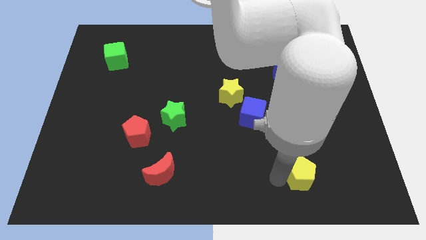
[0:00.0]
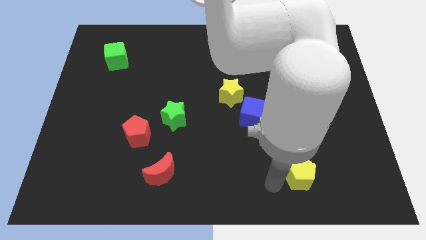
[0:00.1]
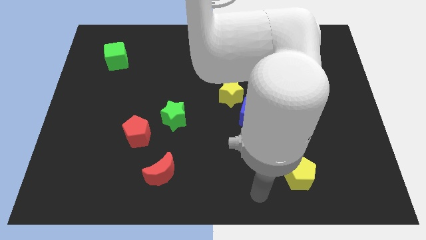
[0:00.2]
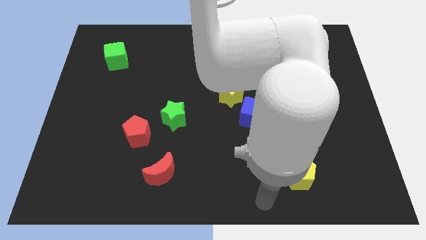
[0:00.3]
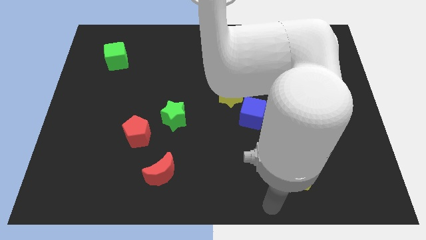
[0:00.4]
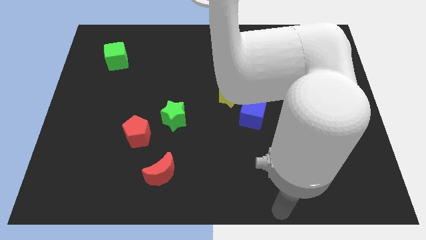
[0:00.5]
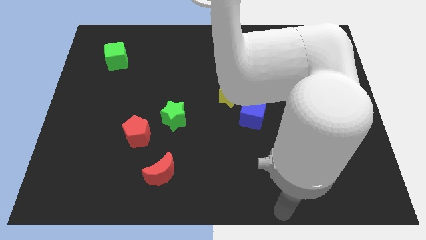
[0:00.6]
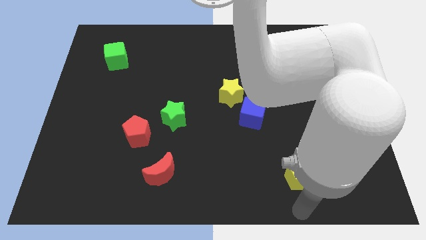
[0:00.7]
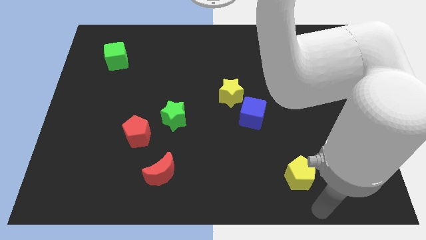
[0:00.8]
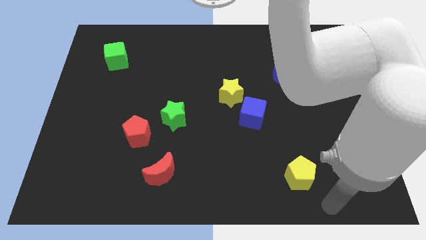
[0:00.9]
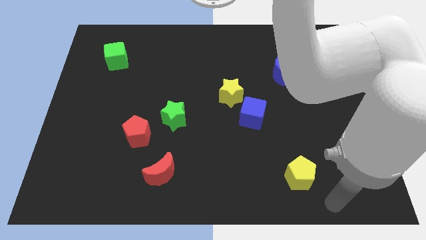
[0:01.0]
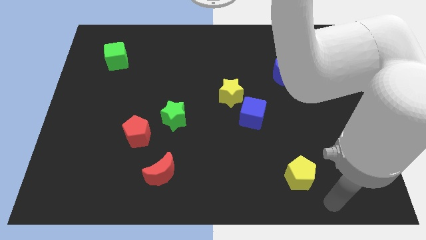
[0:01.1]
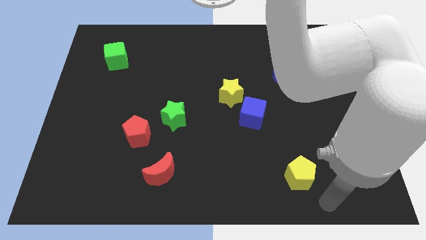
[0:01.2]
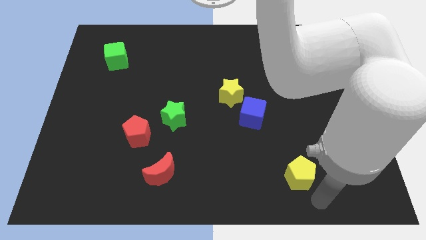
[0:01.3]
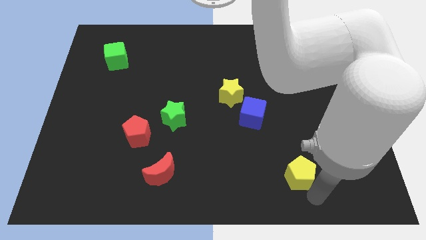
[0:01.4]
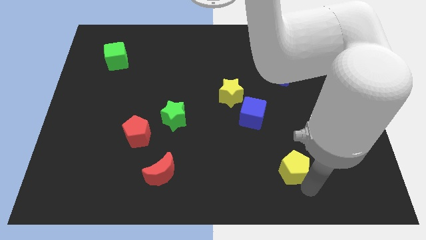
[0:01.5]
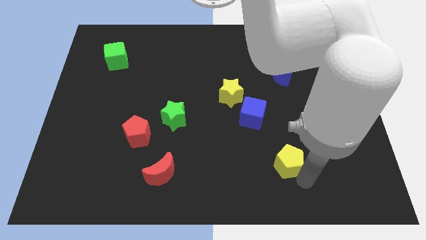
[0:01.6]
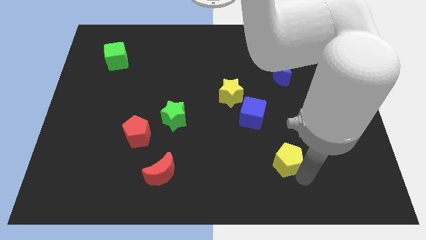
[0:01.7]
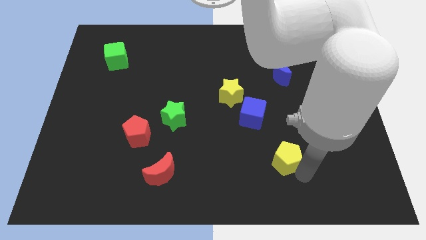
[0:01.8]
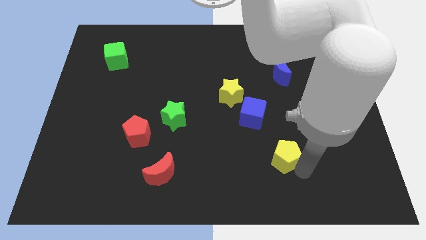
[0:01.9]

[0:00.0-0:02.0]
place the yellow pentagon diagonally to the blue cube

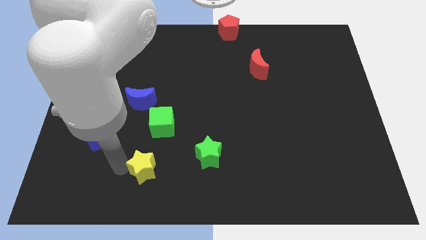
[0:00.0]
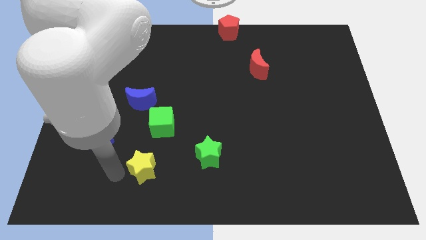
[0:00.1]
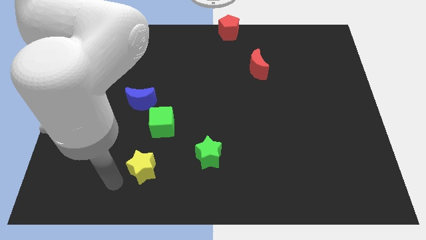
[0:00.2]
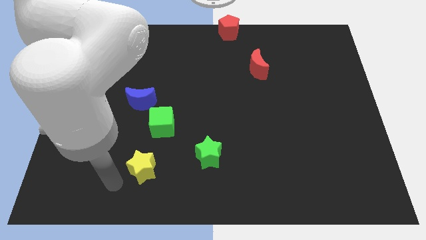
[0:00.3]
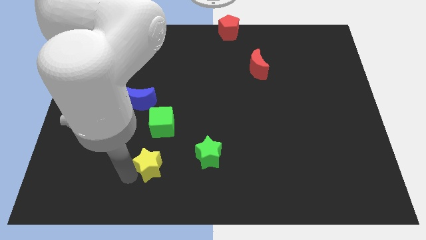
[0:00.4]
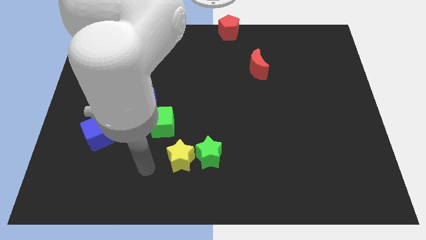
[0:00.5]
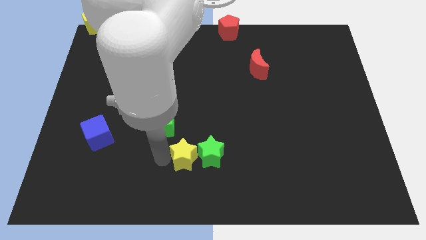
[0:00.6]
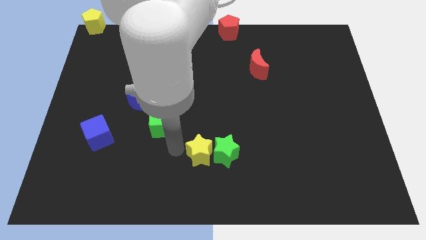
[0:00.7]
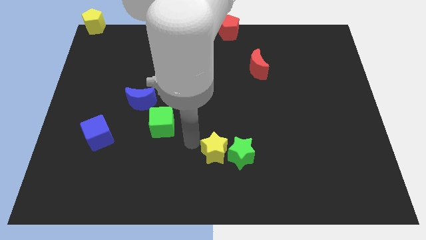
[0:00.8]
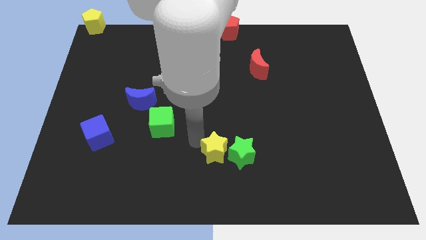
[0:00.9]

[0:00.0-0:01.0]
push yellow star towards green star

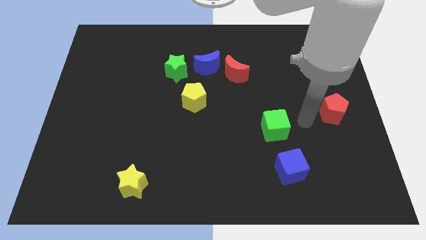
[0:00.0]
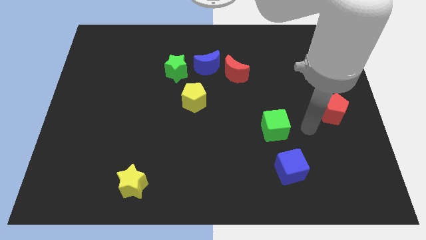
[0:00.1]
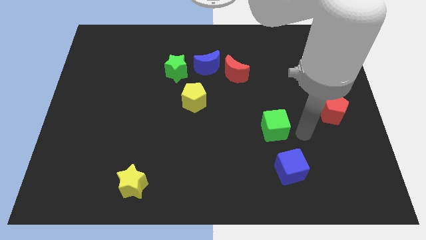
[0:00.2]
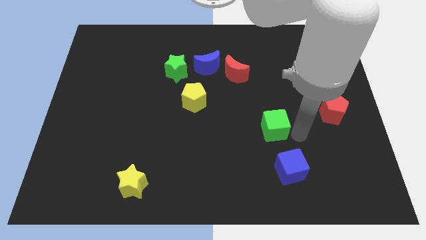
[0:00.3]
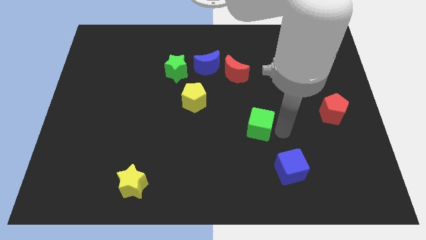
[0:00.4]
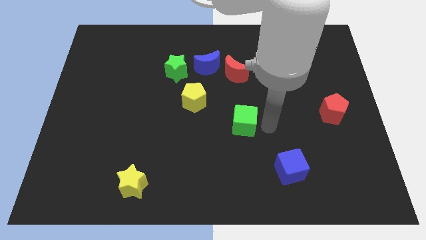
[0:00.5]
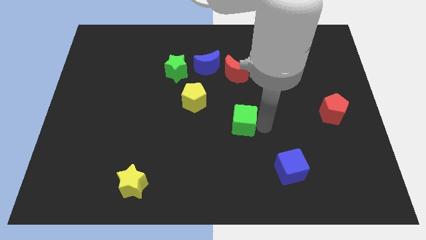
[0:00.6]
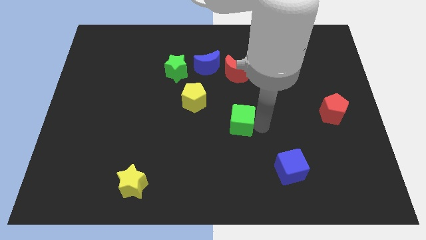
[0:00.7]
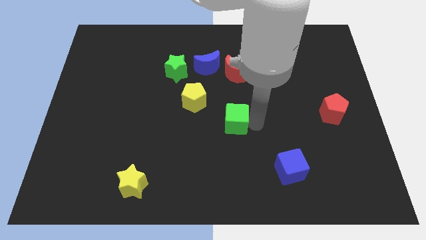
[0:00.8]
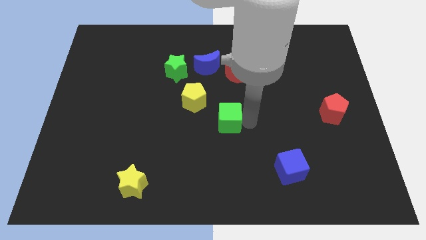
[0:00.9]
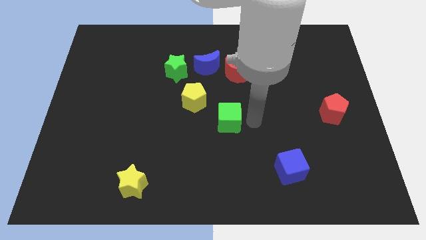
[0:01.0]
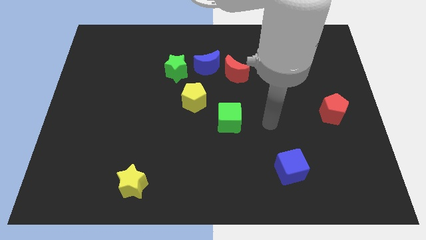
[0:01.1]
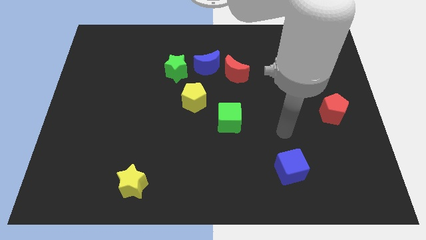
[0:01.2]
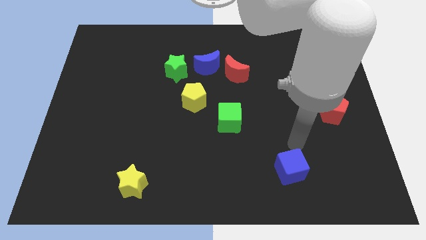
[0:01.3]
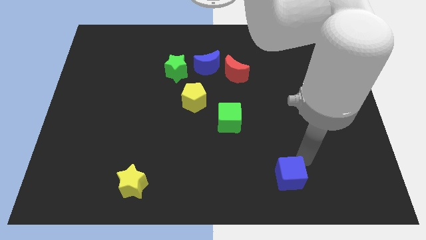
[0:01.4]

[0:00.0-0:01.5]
place the green cube vertically below the red moon

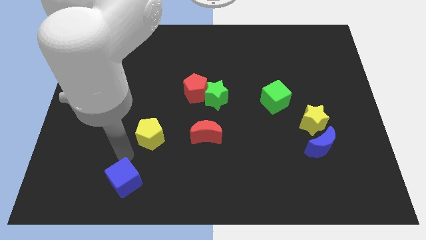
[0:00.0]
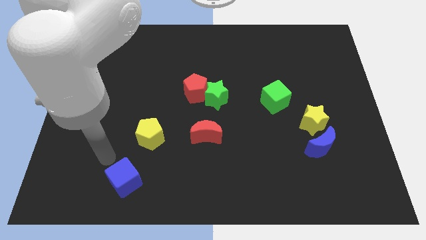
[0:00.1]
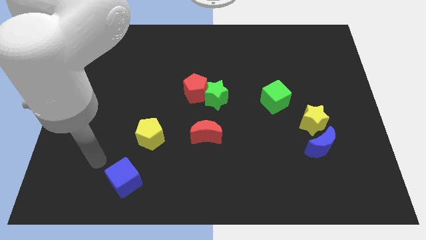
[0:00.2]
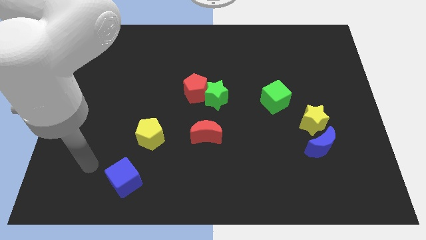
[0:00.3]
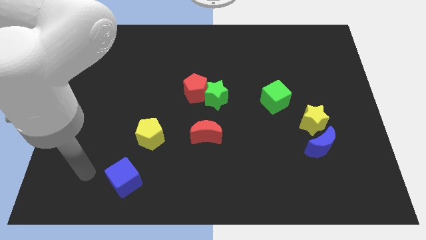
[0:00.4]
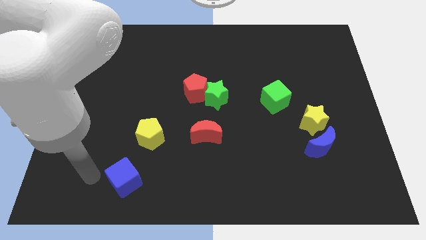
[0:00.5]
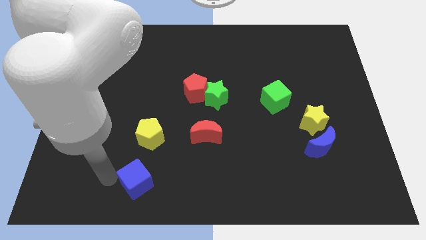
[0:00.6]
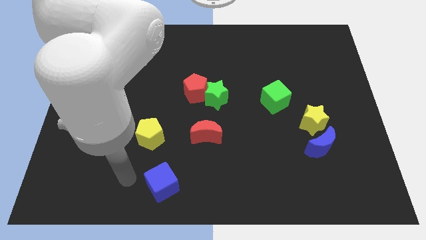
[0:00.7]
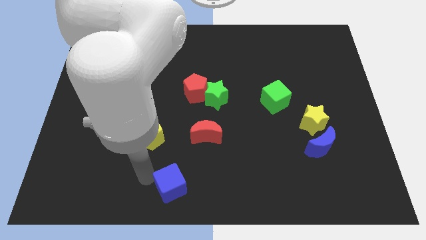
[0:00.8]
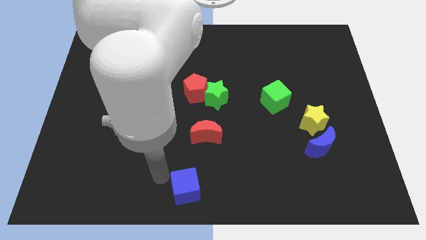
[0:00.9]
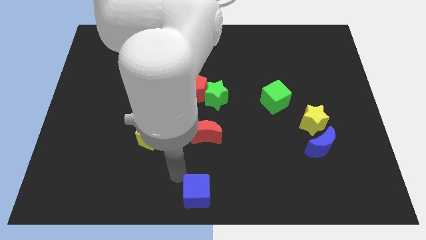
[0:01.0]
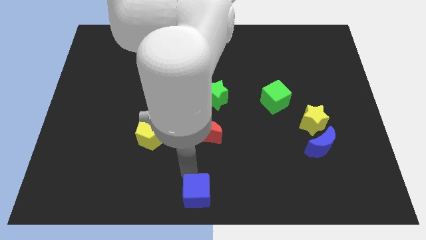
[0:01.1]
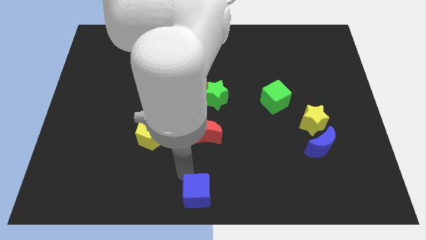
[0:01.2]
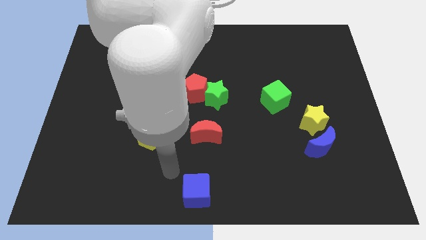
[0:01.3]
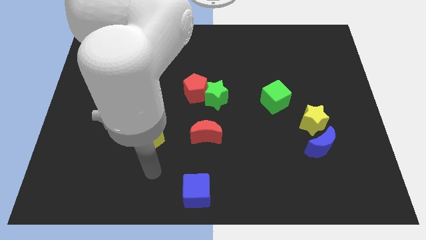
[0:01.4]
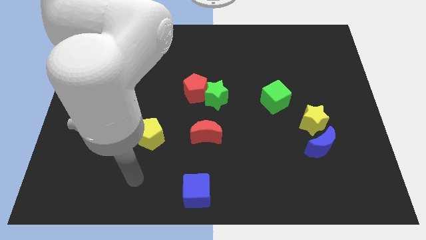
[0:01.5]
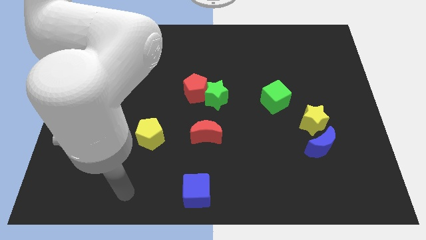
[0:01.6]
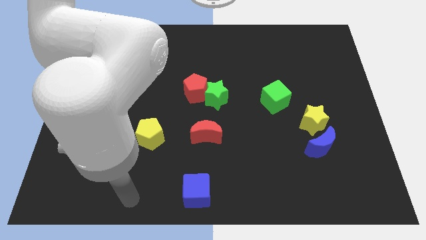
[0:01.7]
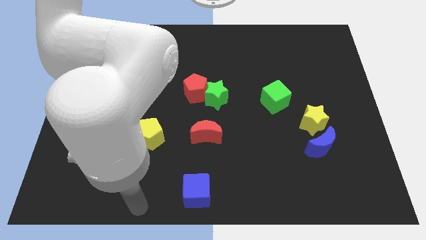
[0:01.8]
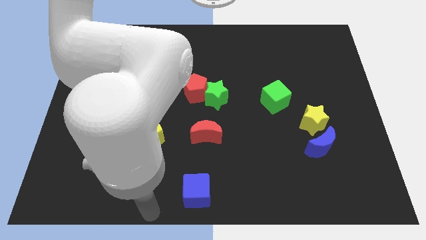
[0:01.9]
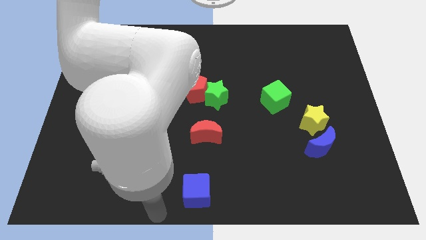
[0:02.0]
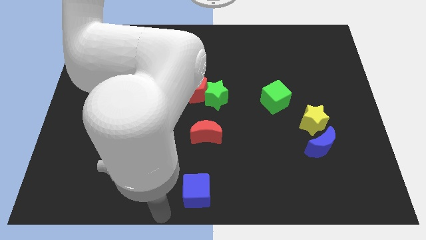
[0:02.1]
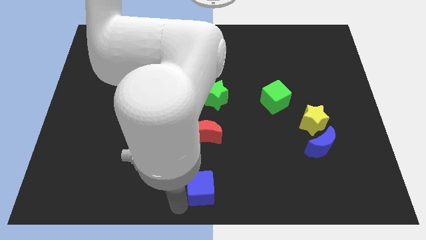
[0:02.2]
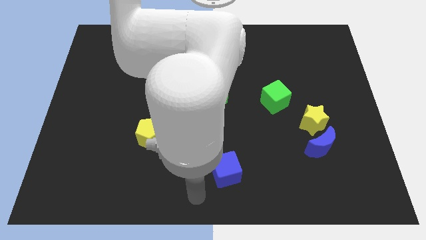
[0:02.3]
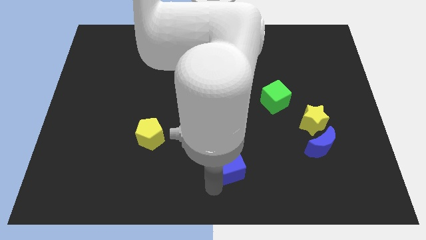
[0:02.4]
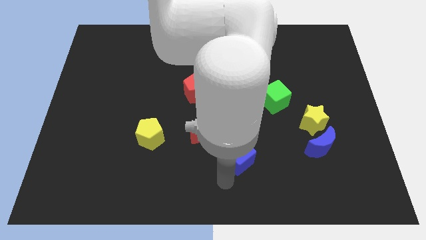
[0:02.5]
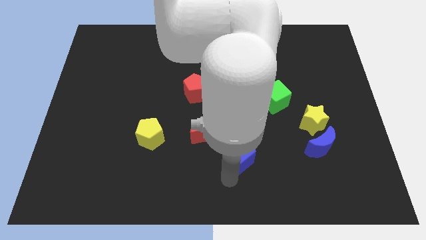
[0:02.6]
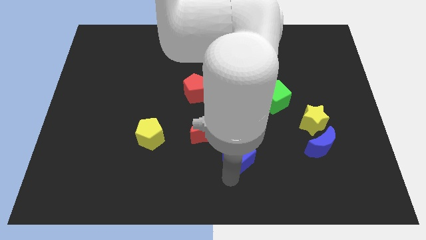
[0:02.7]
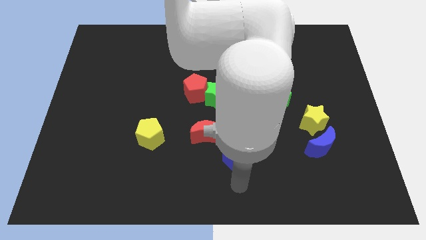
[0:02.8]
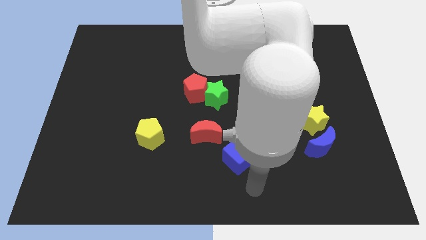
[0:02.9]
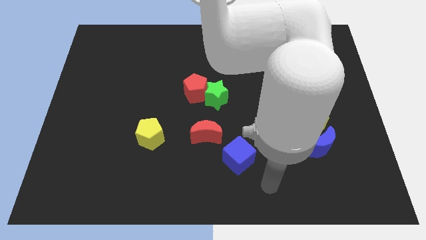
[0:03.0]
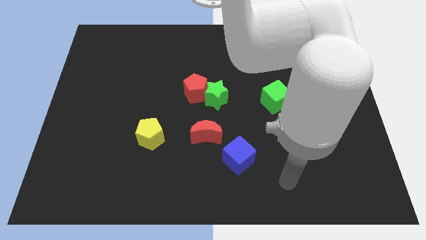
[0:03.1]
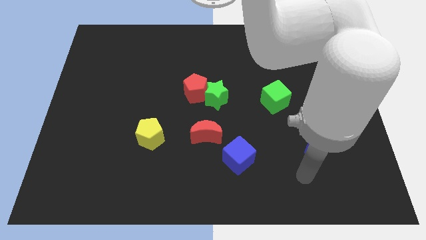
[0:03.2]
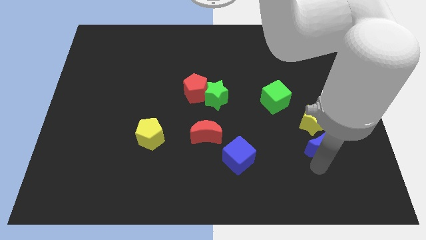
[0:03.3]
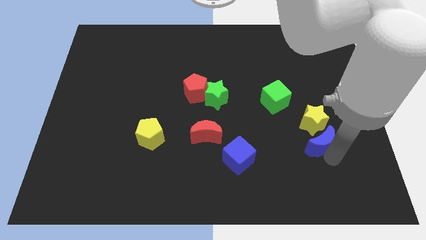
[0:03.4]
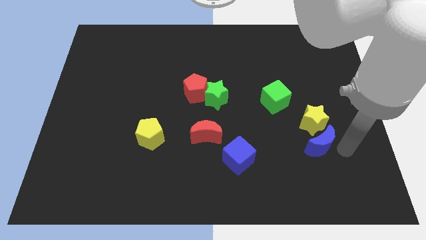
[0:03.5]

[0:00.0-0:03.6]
place the blue cube diagonally bottom right to the red moon

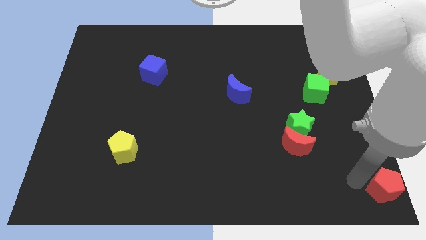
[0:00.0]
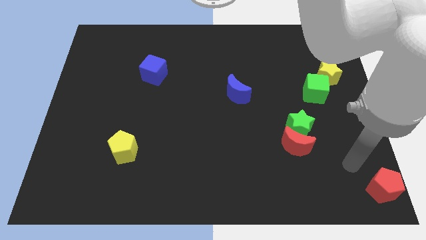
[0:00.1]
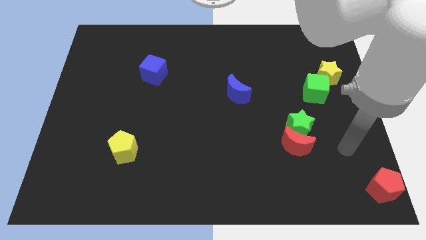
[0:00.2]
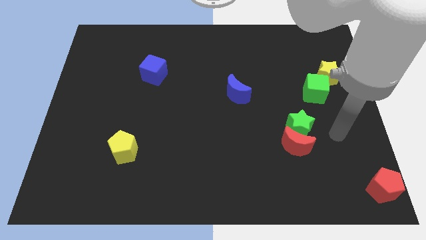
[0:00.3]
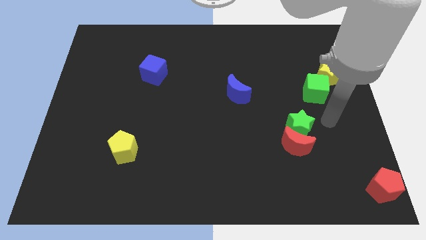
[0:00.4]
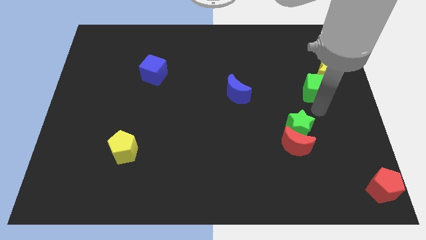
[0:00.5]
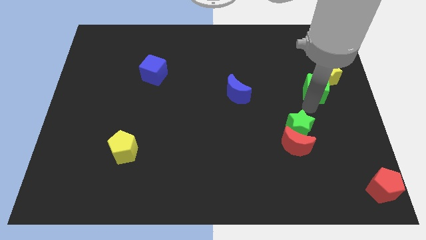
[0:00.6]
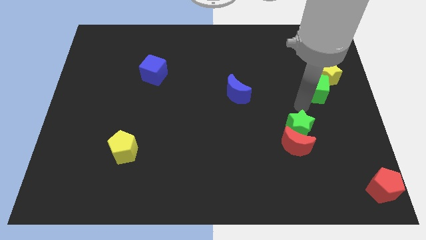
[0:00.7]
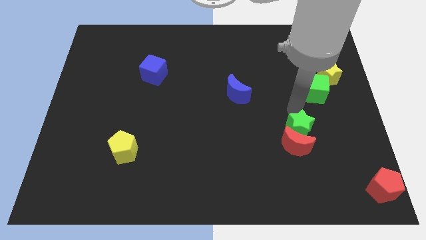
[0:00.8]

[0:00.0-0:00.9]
move your arm away from the red pentagon

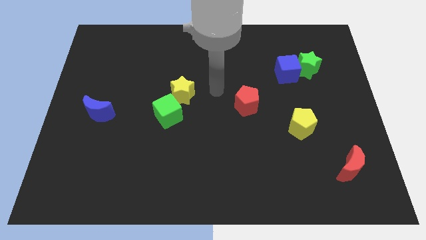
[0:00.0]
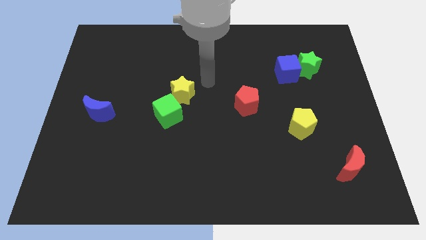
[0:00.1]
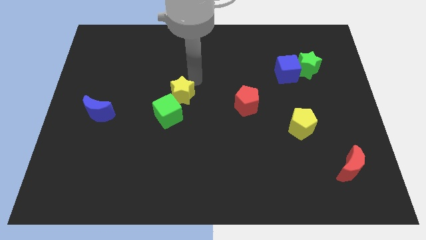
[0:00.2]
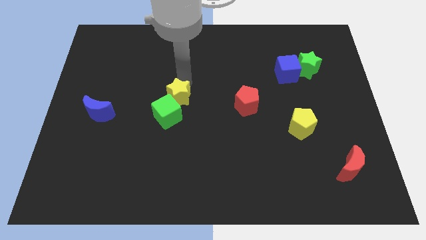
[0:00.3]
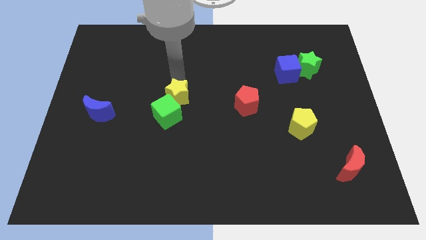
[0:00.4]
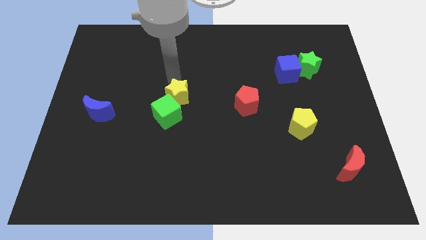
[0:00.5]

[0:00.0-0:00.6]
touch the yellow star
